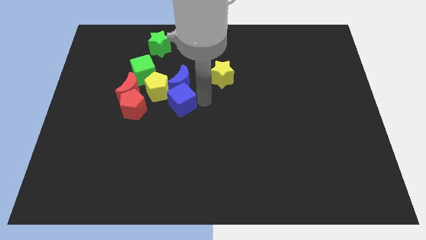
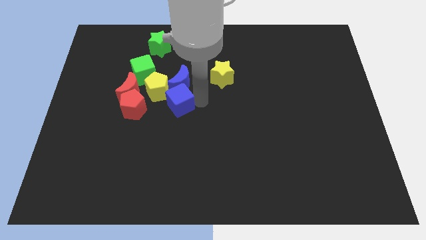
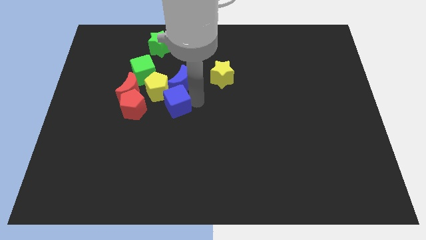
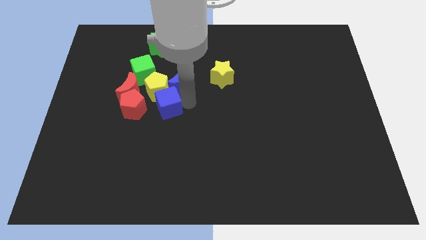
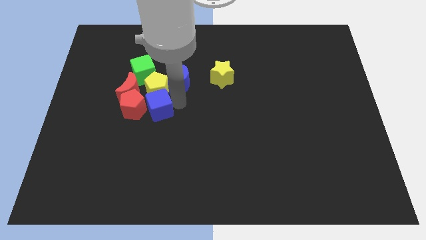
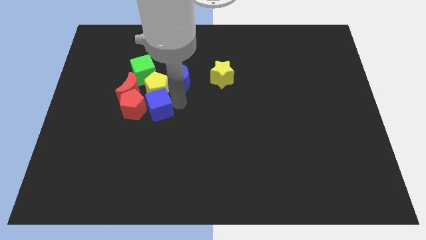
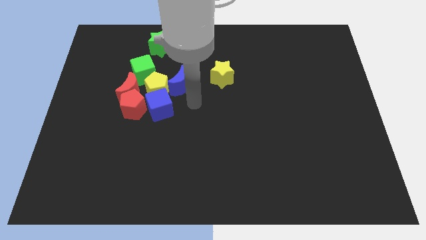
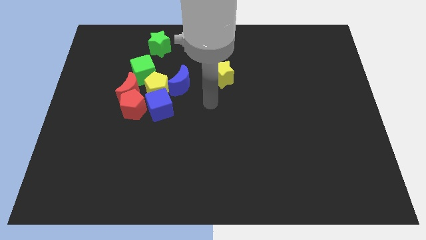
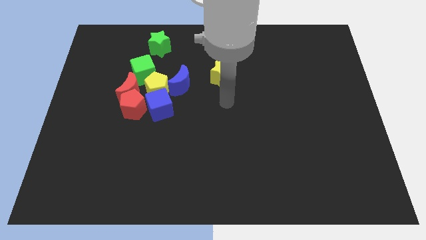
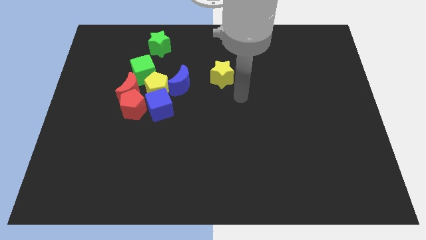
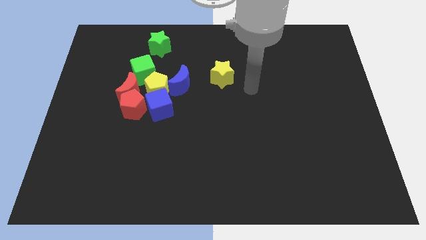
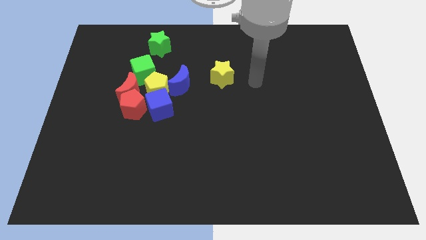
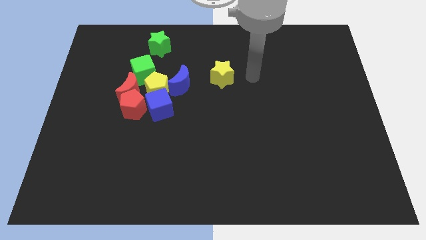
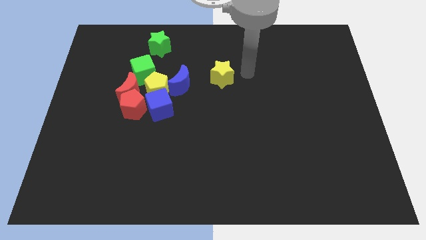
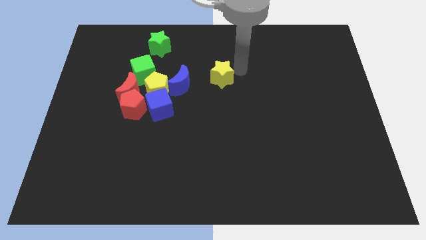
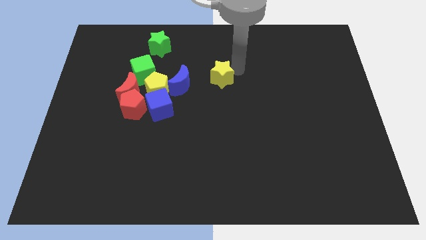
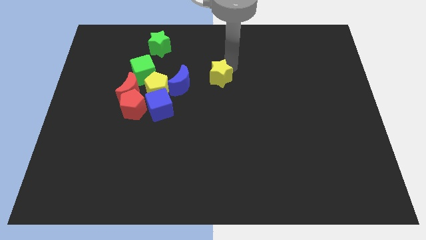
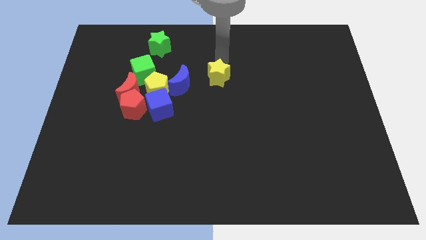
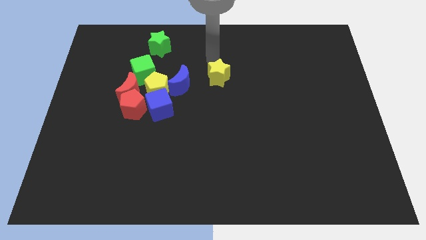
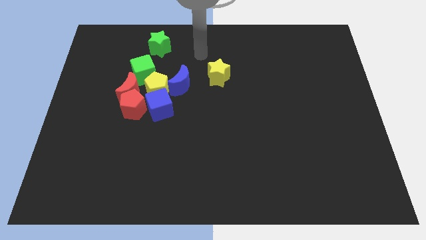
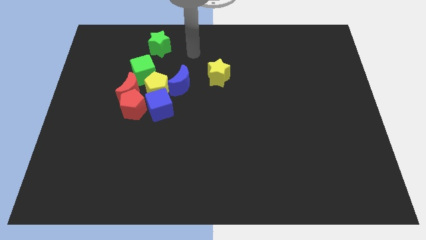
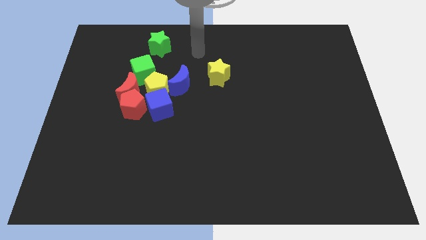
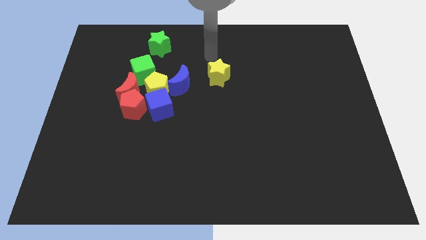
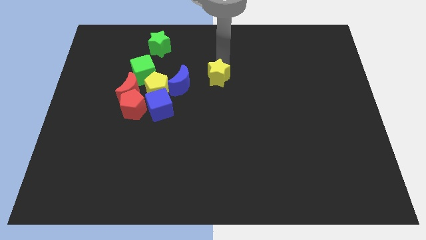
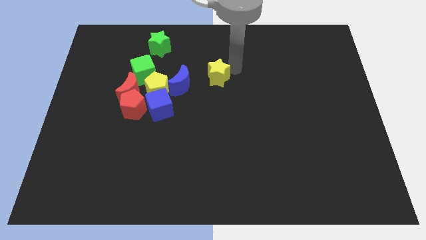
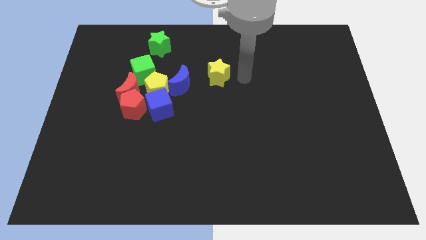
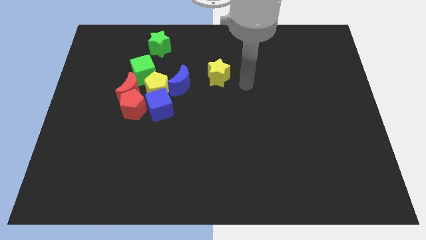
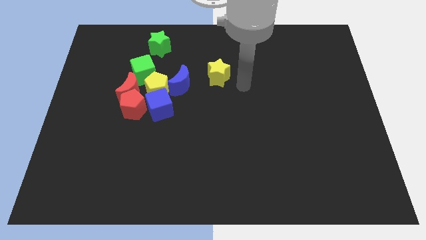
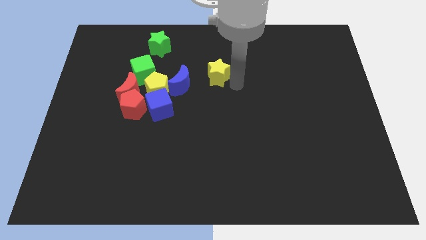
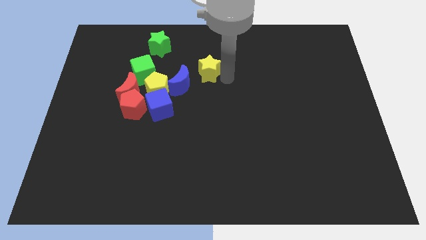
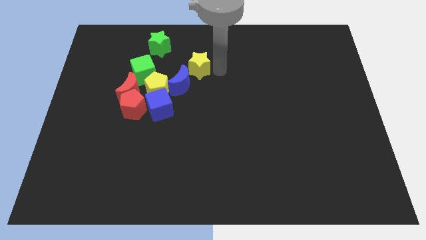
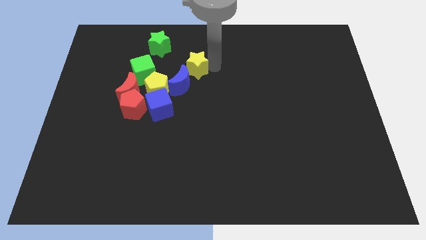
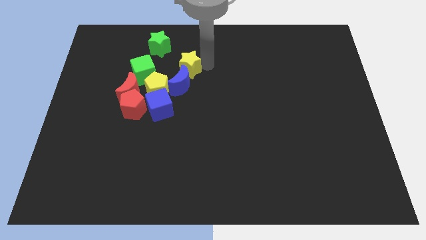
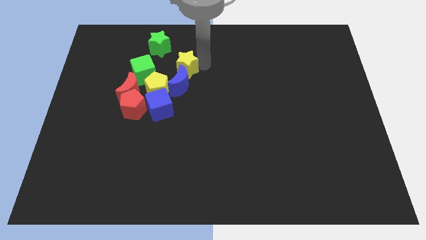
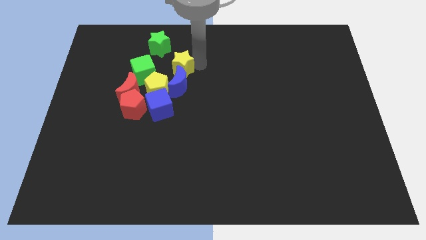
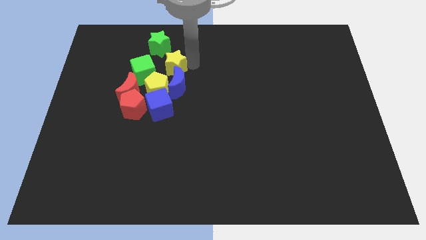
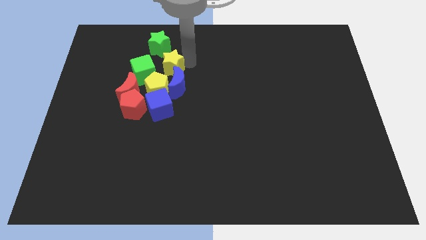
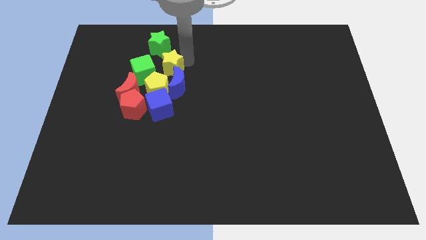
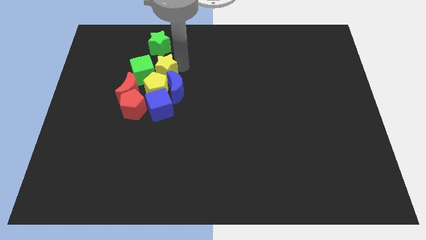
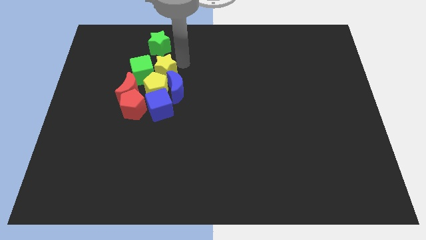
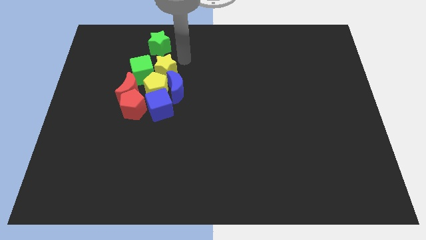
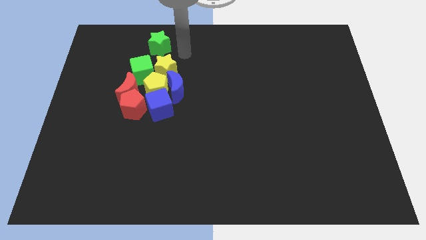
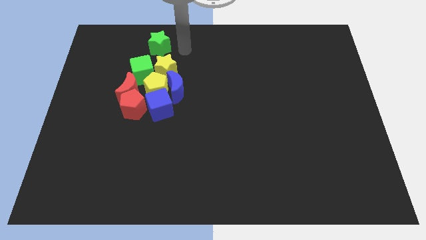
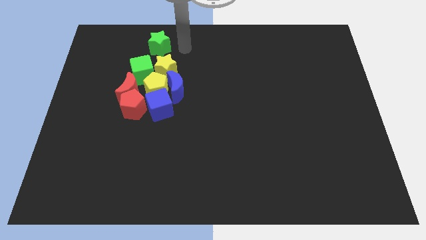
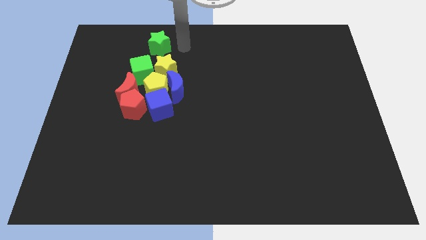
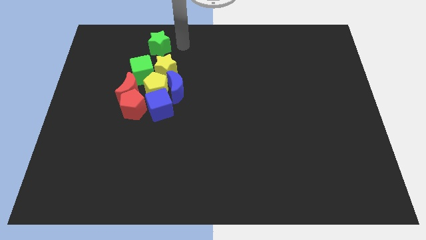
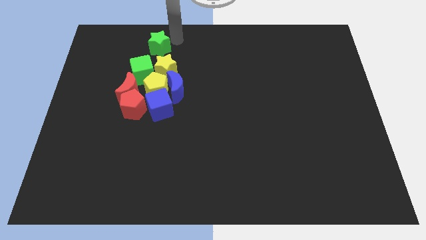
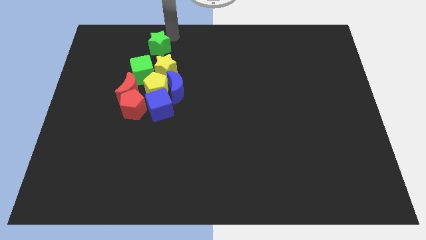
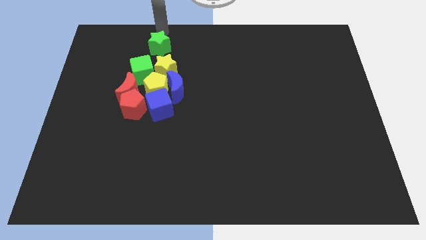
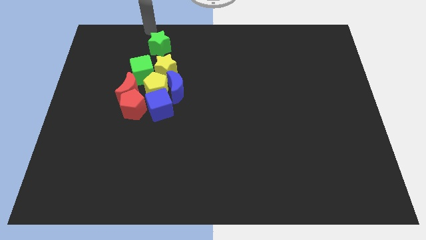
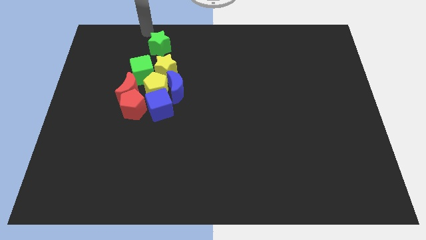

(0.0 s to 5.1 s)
arrange a group of blocks to the left side of the center

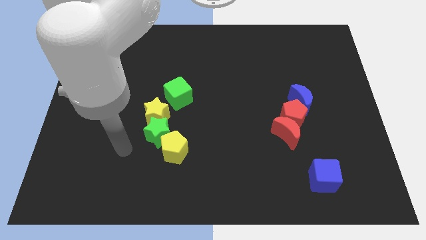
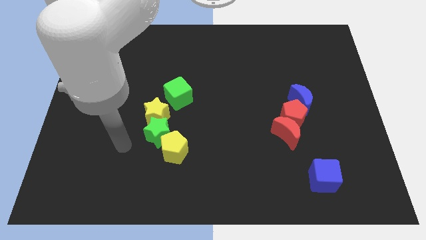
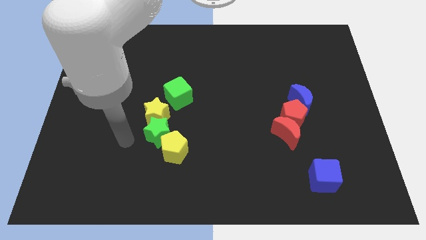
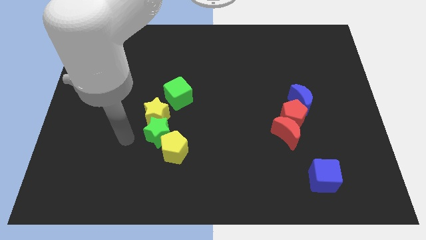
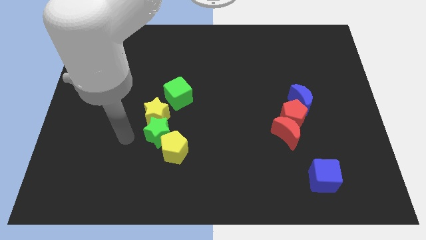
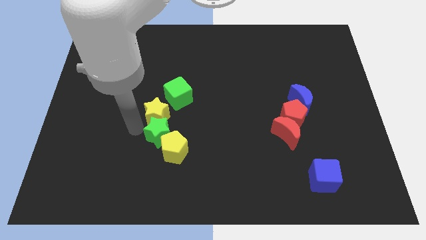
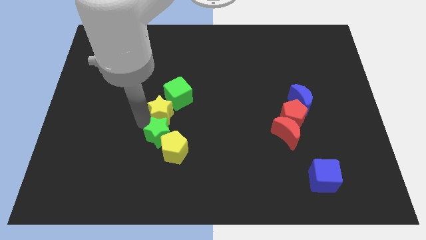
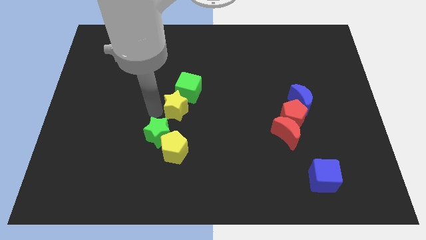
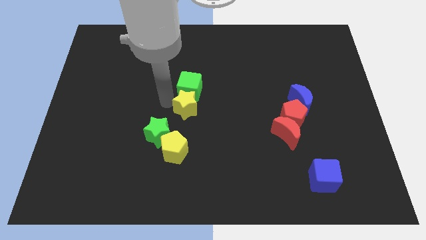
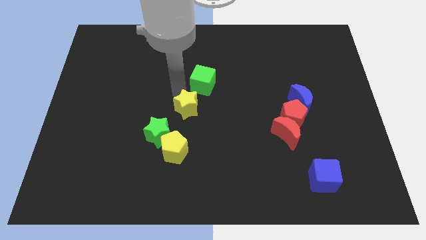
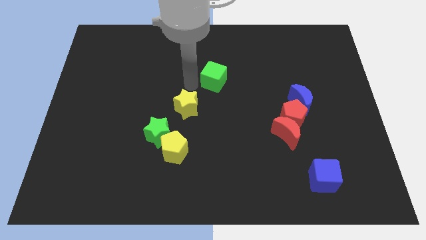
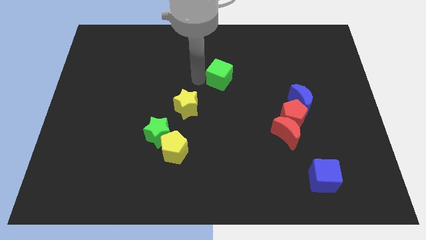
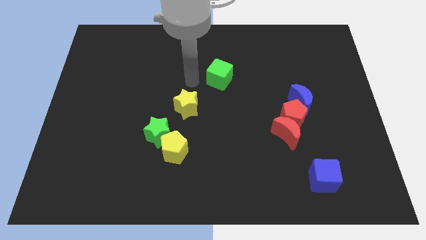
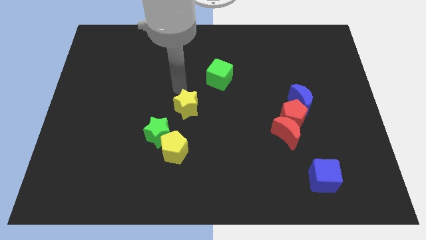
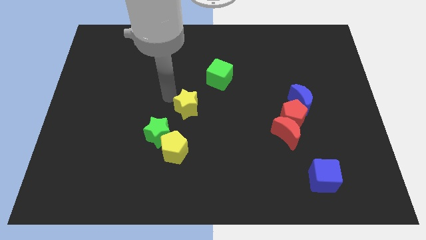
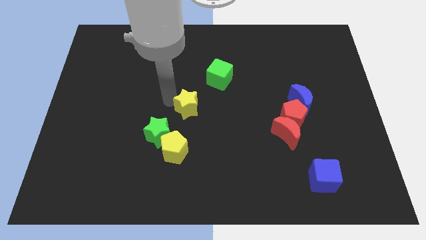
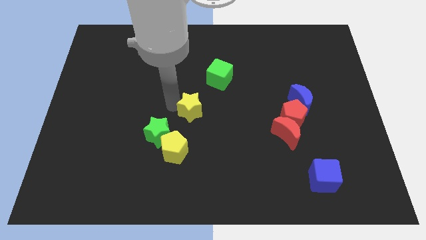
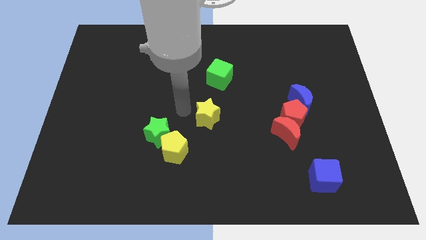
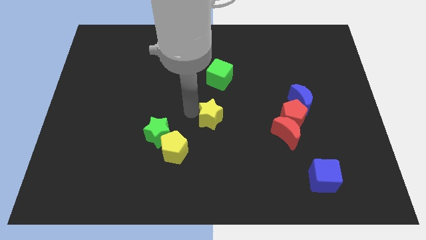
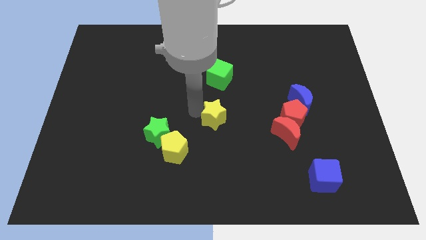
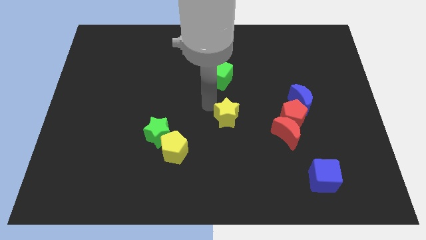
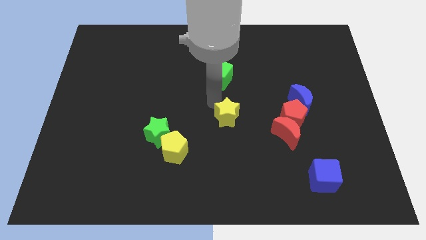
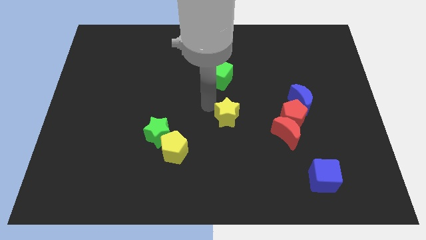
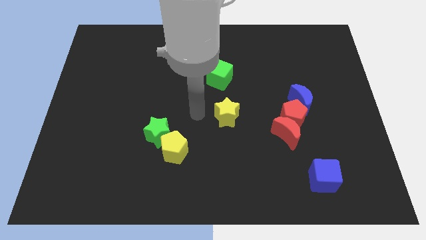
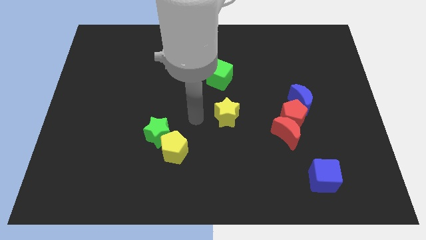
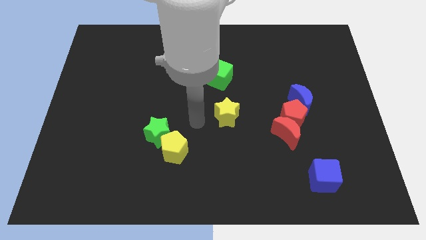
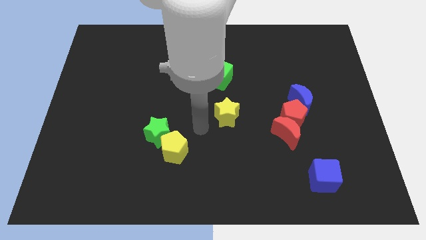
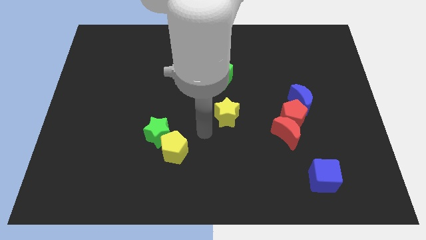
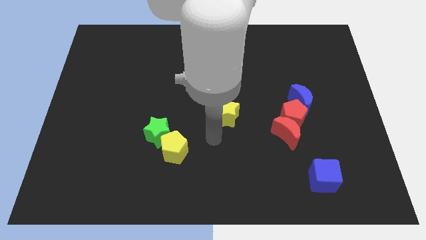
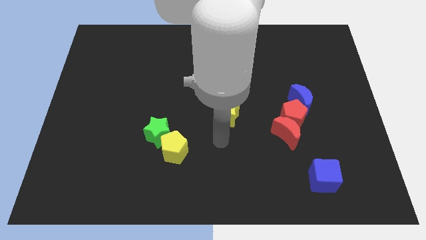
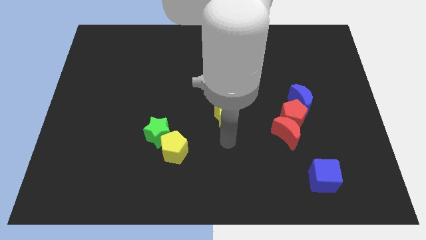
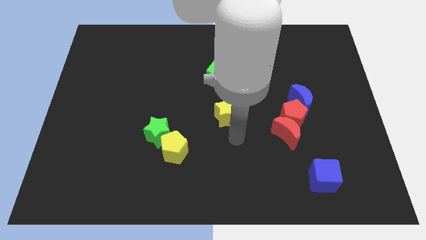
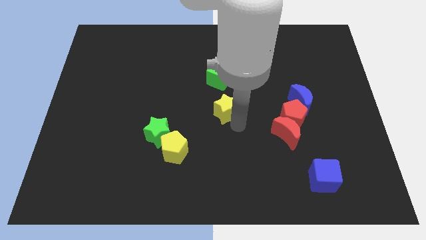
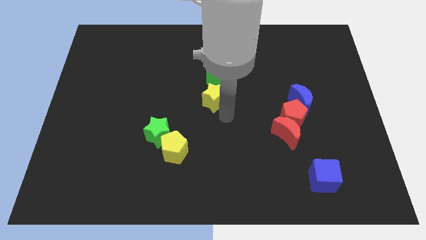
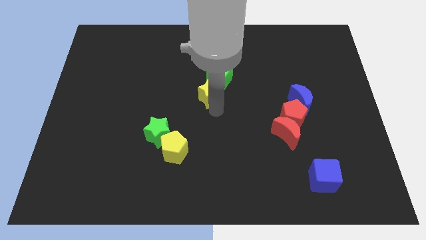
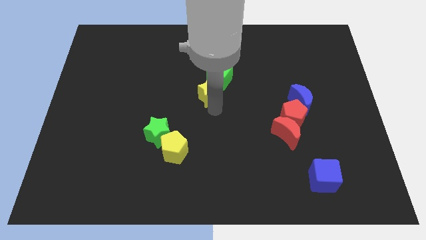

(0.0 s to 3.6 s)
push the yellow star below the green cube

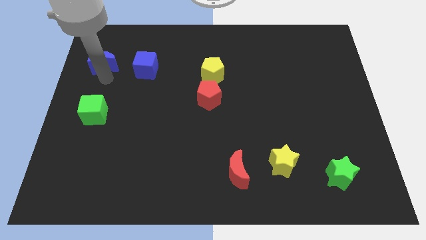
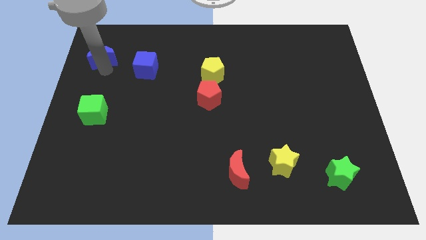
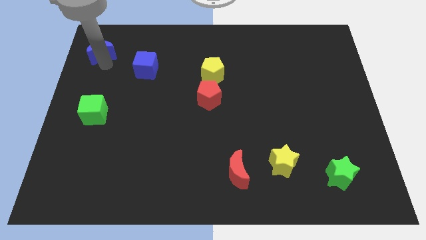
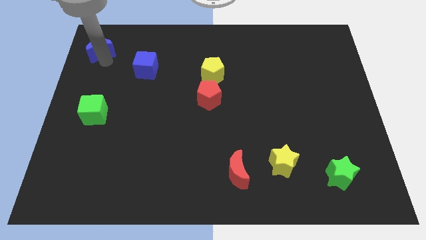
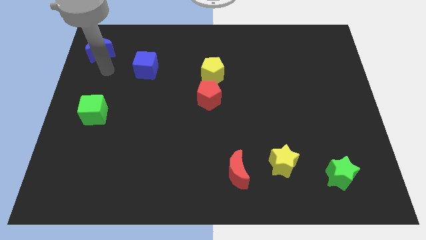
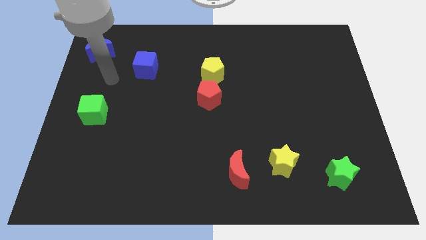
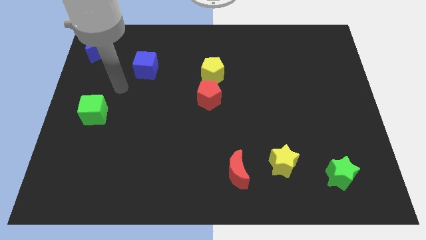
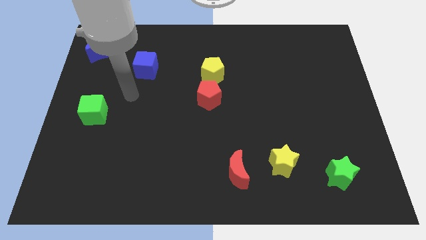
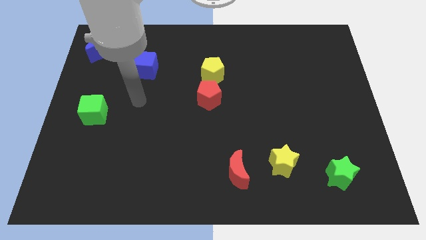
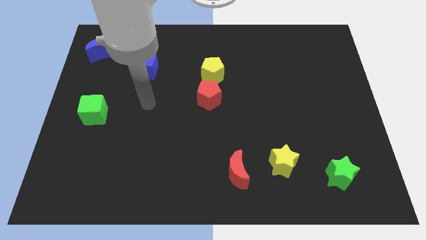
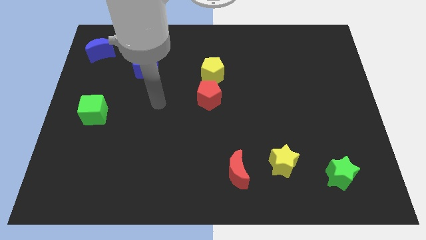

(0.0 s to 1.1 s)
push the blue moon to the top left of the board
